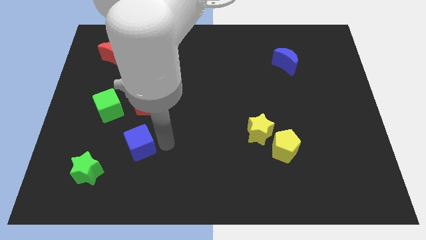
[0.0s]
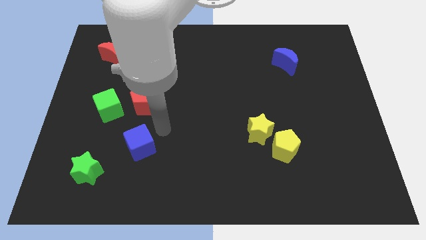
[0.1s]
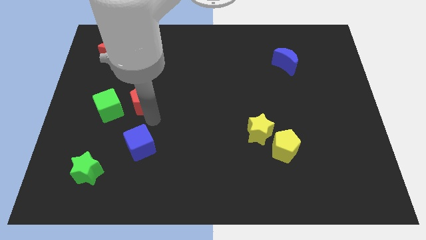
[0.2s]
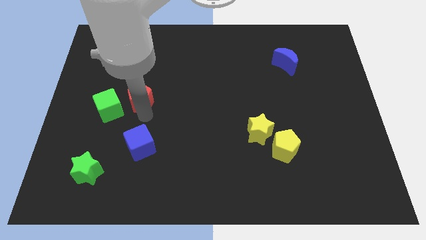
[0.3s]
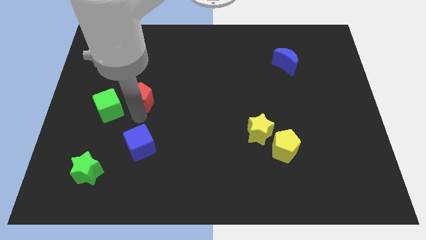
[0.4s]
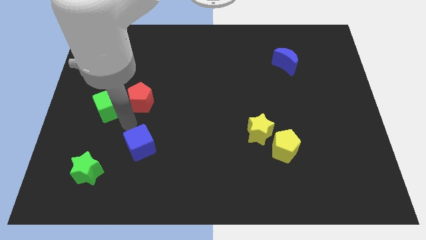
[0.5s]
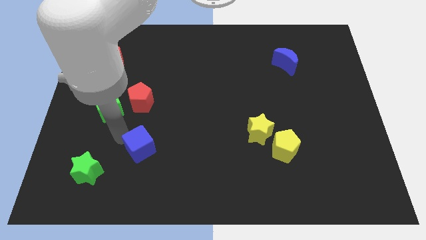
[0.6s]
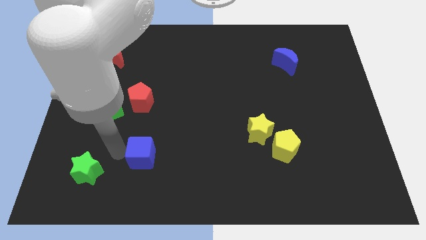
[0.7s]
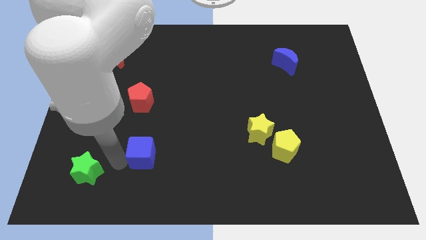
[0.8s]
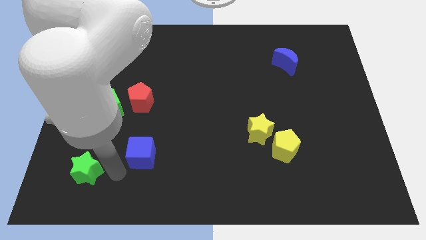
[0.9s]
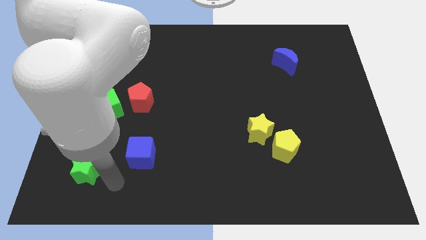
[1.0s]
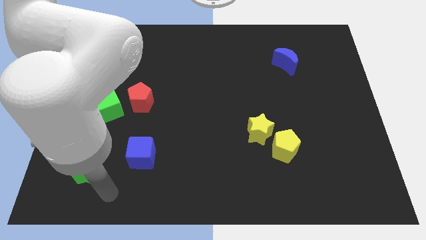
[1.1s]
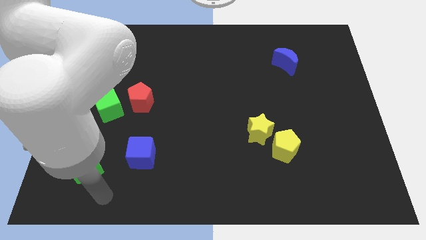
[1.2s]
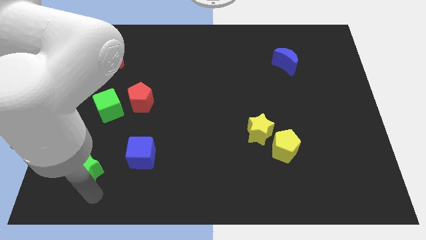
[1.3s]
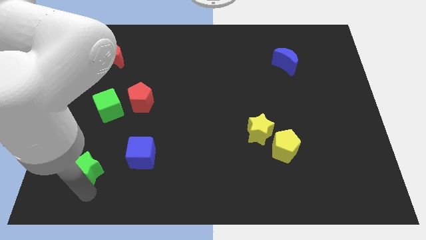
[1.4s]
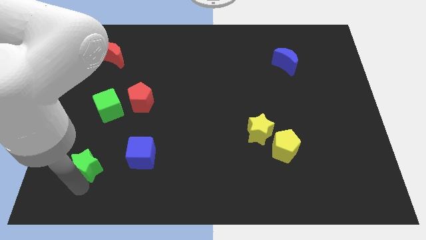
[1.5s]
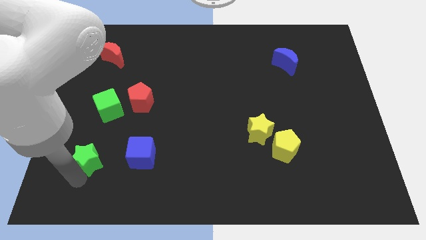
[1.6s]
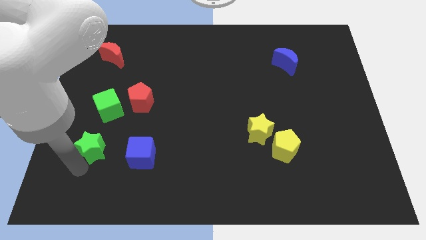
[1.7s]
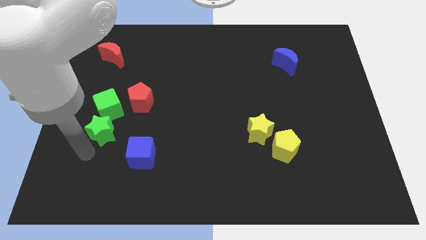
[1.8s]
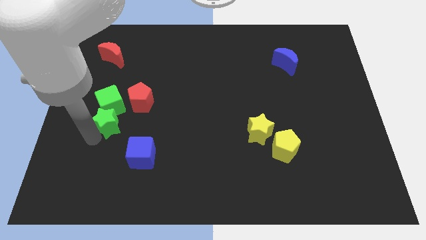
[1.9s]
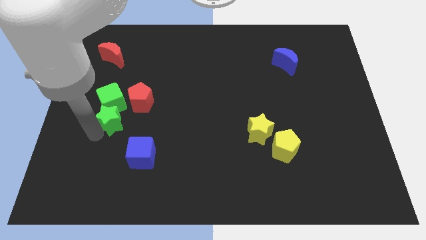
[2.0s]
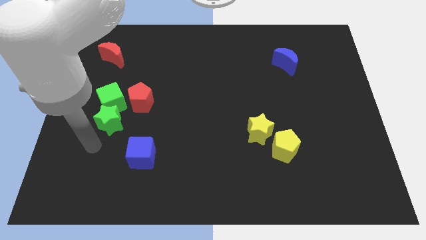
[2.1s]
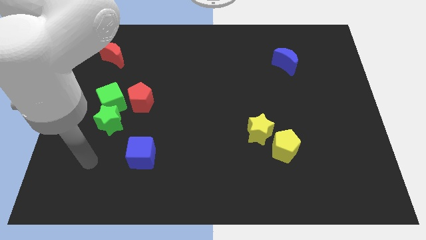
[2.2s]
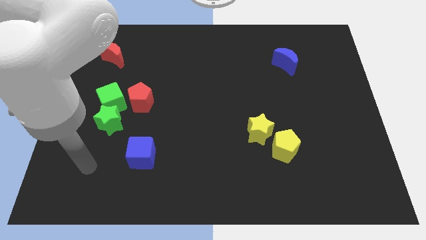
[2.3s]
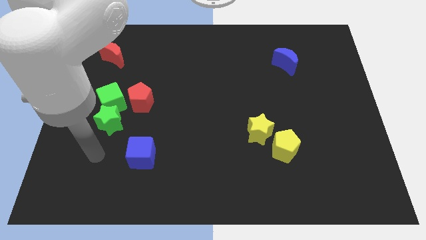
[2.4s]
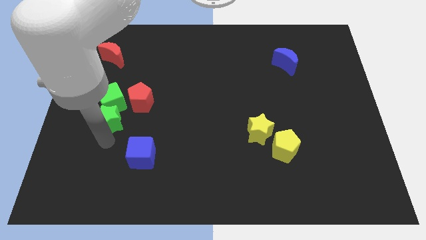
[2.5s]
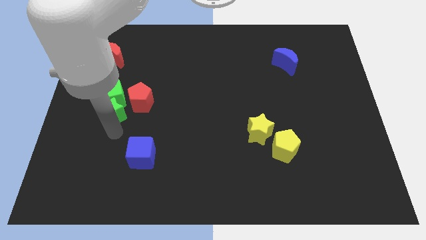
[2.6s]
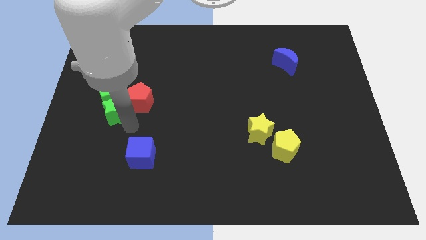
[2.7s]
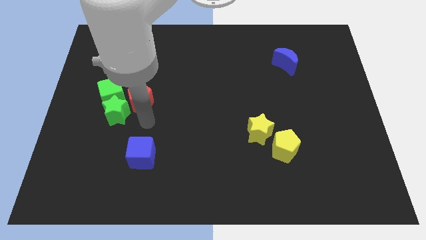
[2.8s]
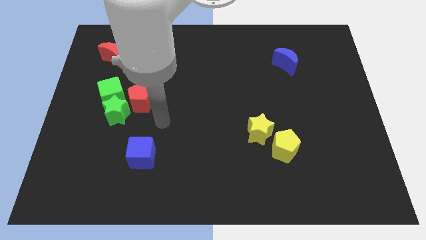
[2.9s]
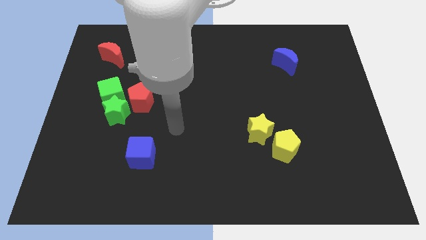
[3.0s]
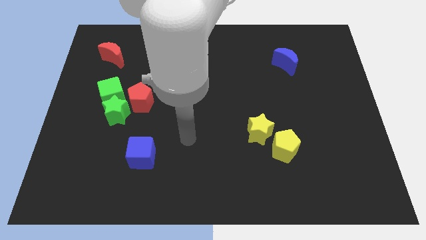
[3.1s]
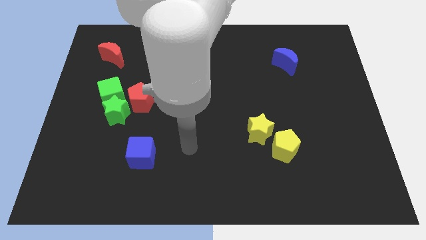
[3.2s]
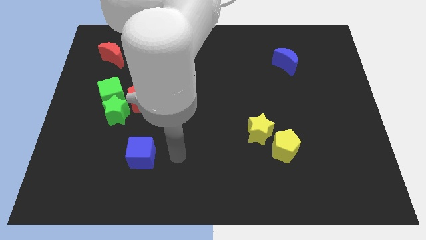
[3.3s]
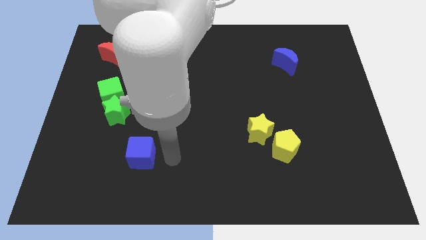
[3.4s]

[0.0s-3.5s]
move the green blocks to the left side of the red pentagon

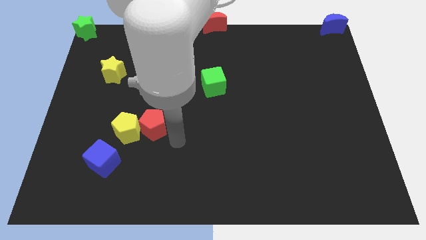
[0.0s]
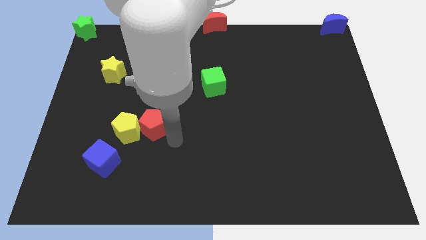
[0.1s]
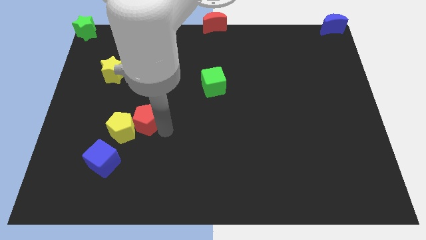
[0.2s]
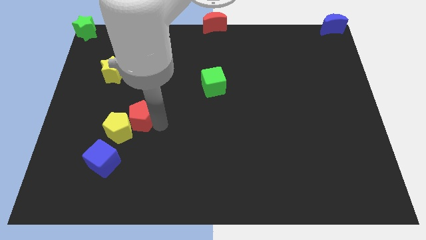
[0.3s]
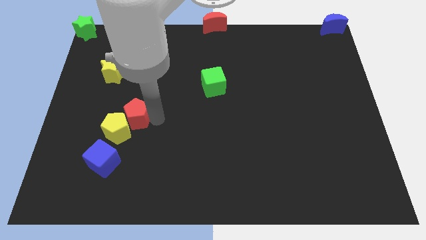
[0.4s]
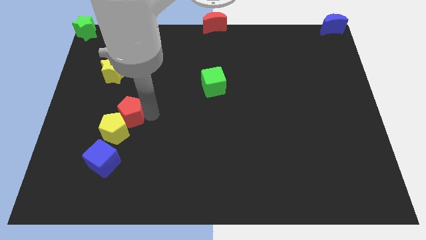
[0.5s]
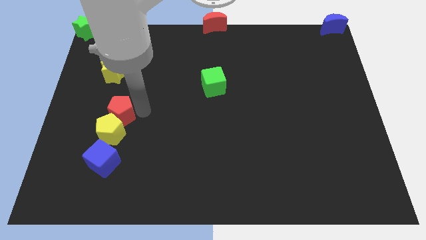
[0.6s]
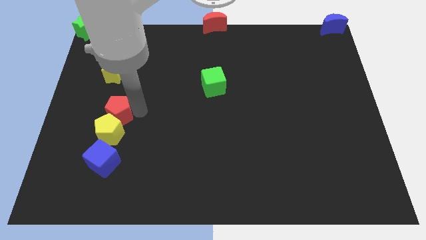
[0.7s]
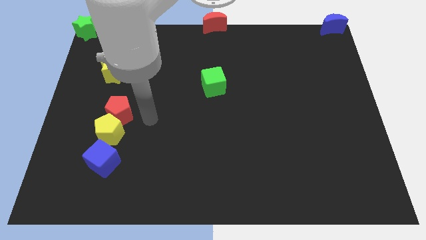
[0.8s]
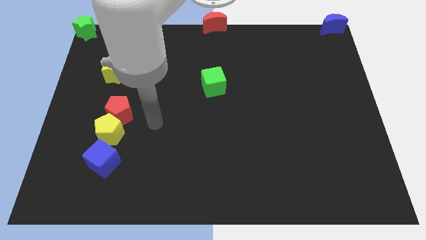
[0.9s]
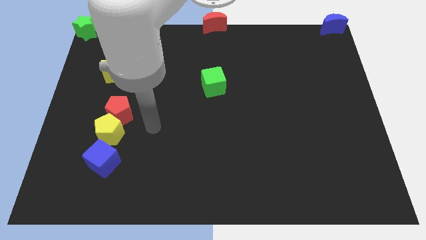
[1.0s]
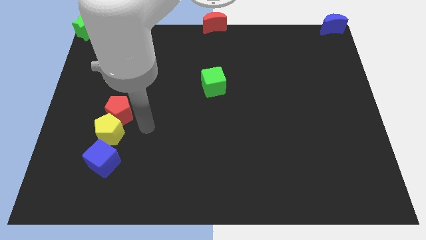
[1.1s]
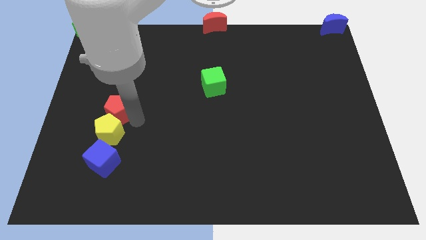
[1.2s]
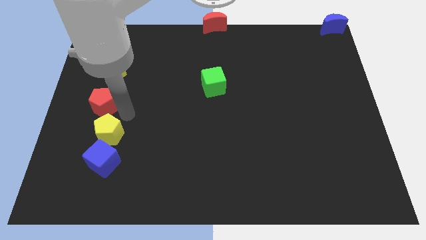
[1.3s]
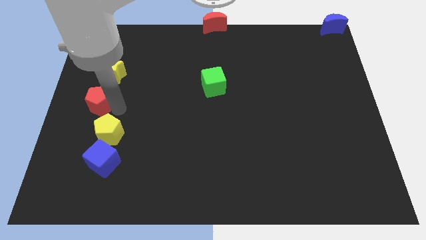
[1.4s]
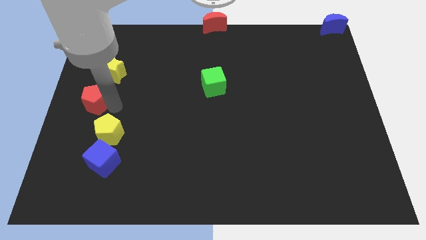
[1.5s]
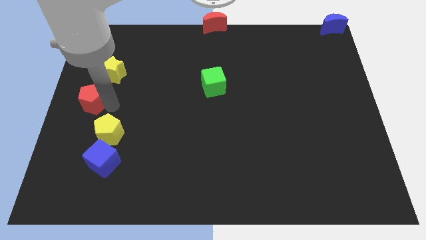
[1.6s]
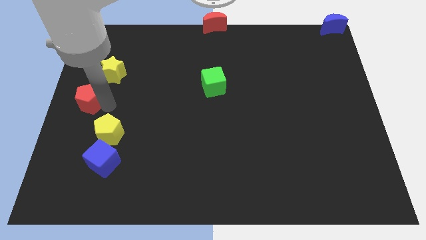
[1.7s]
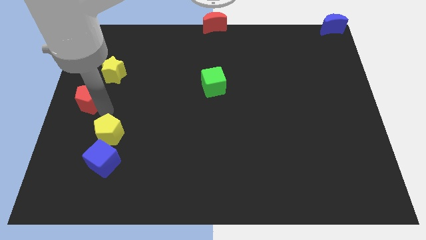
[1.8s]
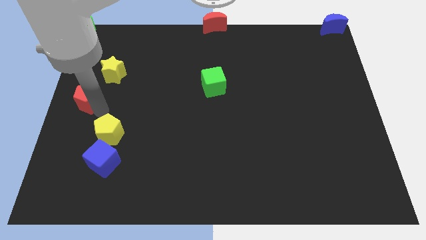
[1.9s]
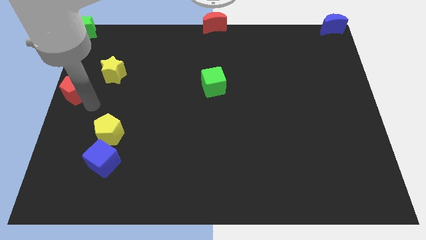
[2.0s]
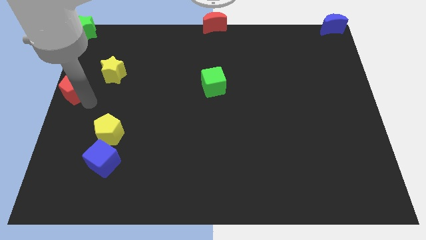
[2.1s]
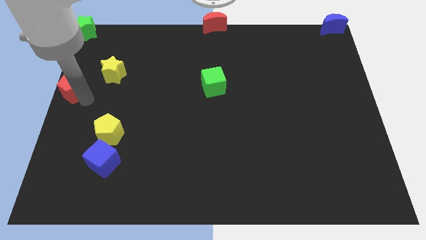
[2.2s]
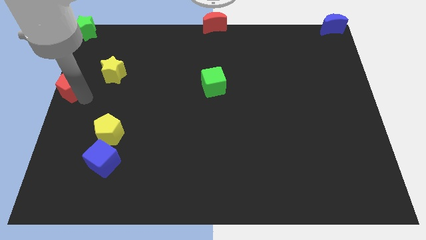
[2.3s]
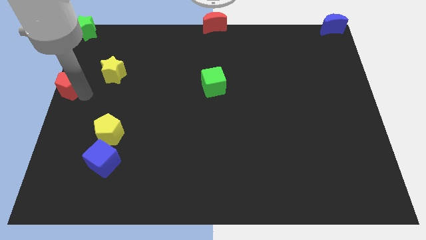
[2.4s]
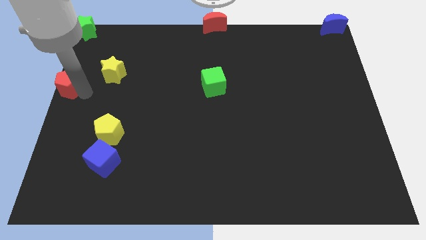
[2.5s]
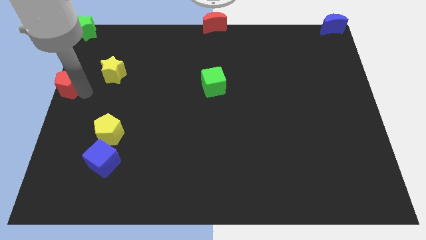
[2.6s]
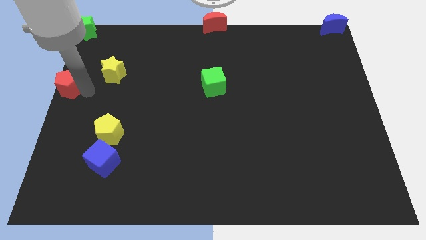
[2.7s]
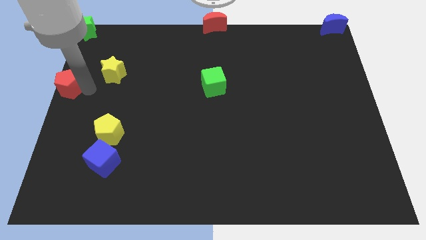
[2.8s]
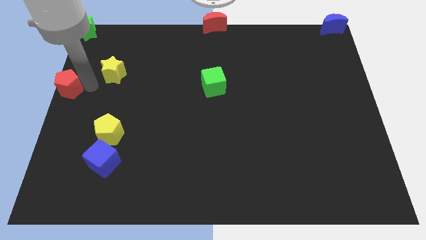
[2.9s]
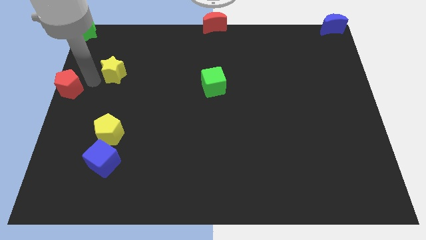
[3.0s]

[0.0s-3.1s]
separate the red pentagon from yellow pentagon

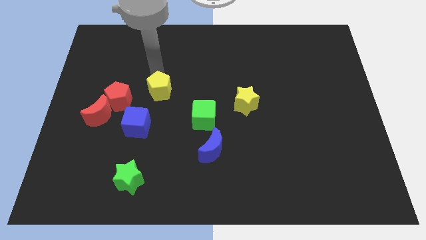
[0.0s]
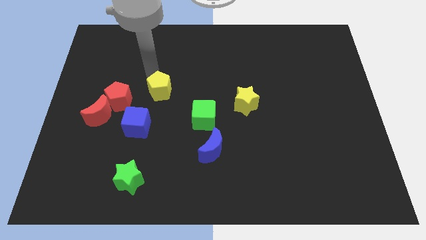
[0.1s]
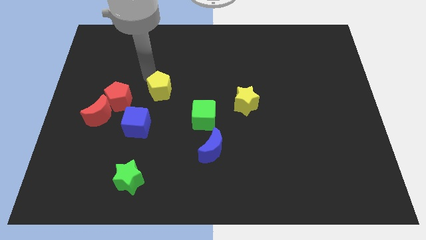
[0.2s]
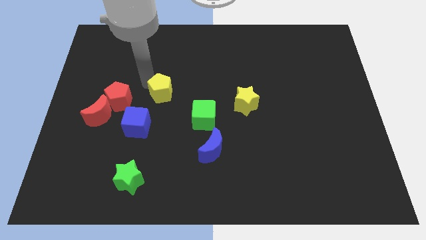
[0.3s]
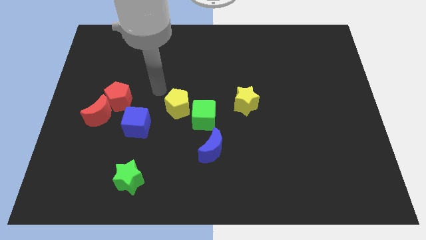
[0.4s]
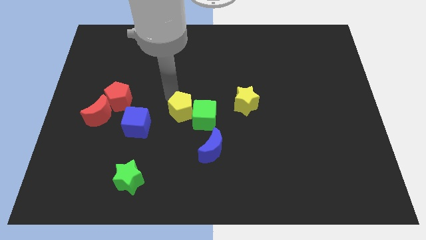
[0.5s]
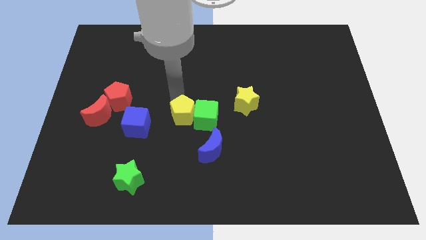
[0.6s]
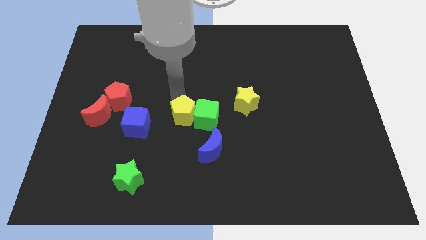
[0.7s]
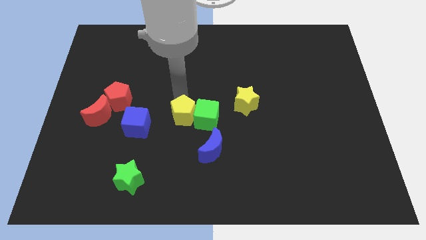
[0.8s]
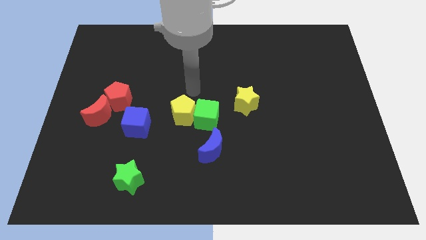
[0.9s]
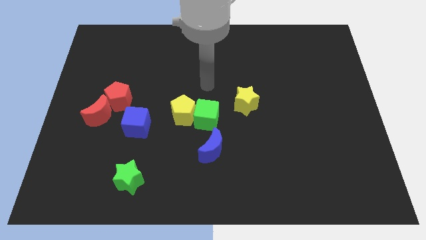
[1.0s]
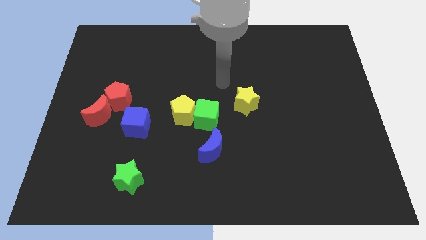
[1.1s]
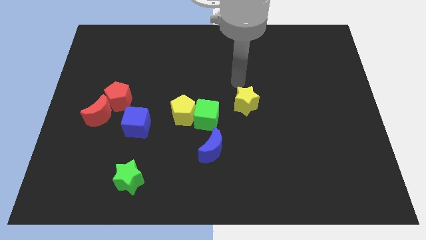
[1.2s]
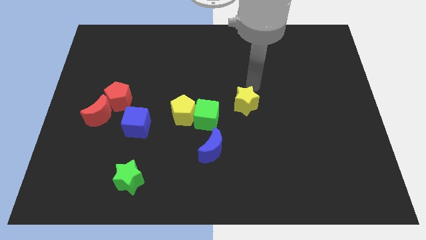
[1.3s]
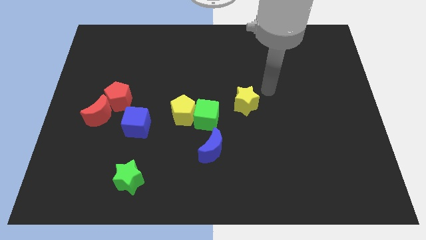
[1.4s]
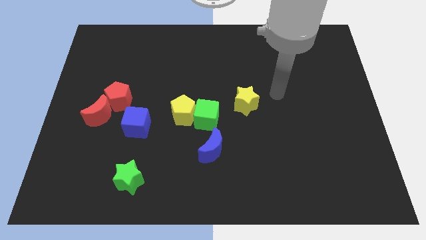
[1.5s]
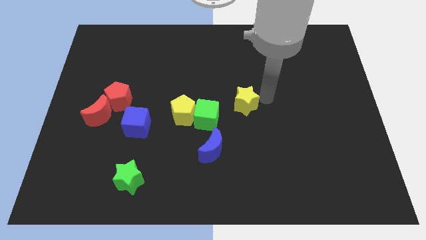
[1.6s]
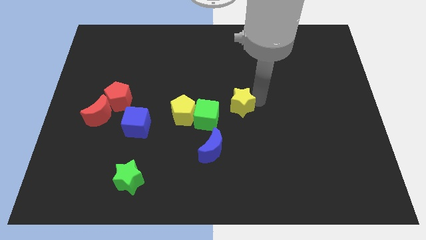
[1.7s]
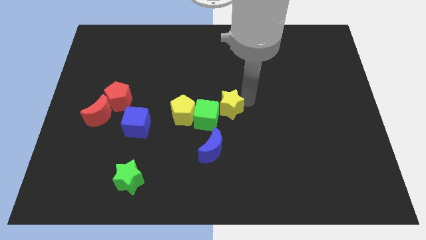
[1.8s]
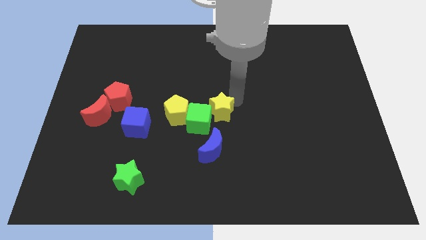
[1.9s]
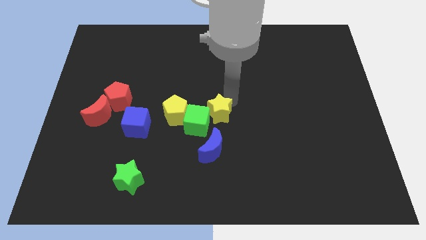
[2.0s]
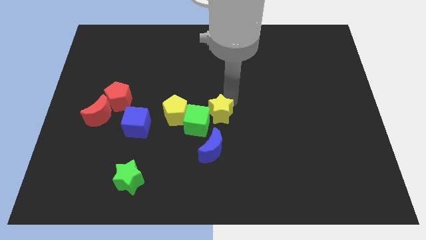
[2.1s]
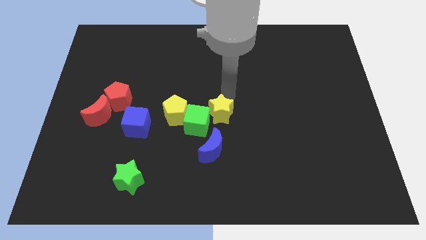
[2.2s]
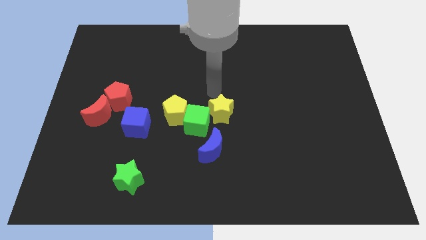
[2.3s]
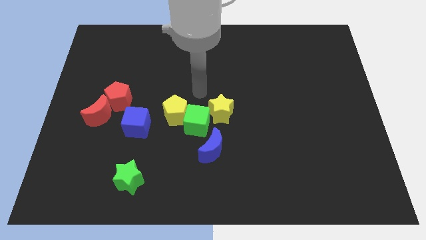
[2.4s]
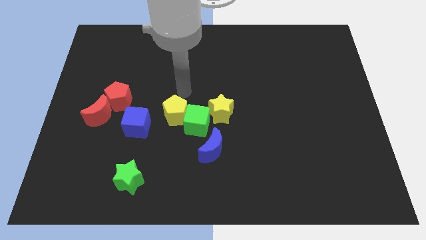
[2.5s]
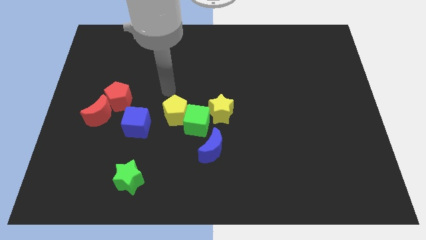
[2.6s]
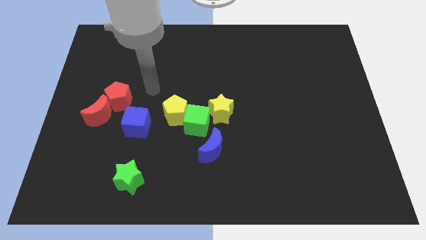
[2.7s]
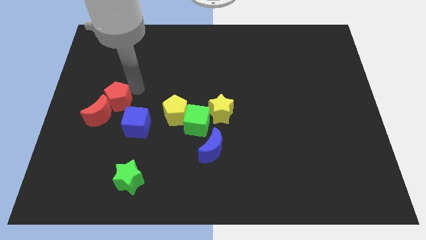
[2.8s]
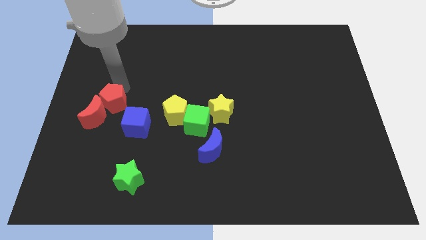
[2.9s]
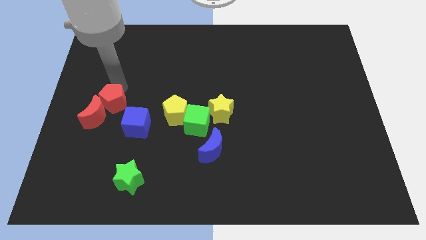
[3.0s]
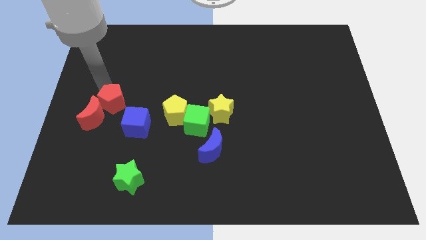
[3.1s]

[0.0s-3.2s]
slide the yellow star above the blue moon
